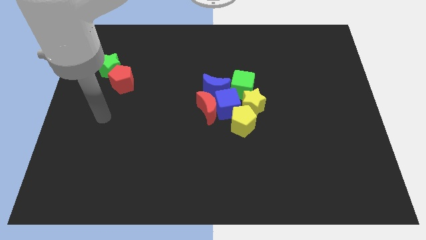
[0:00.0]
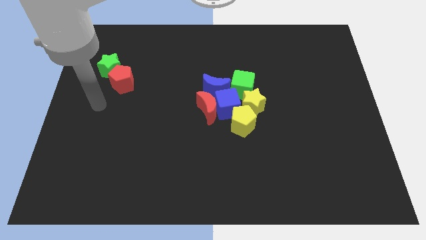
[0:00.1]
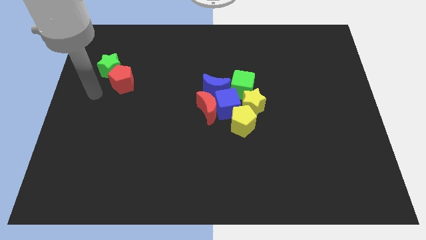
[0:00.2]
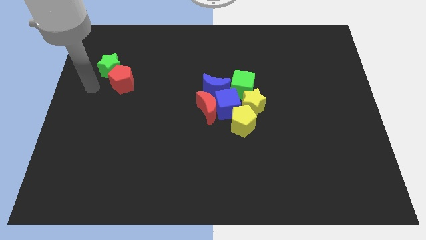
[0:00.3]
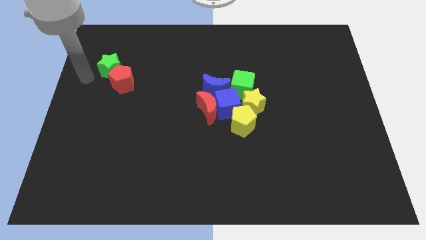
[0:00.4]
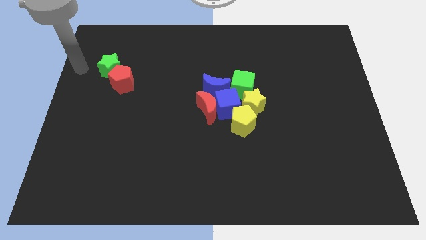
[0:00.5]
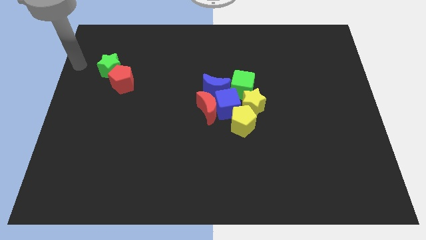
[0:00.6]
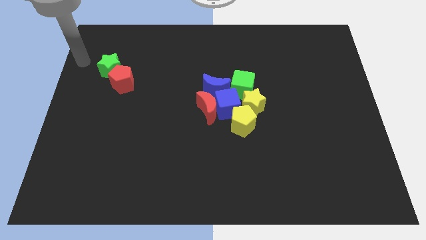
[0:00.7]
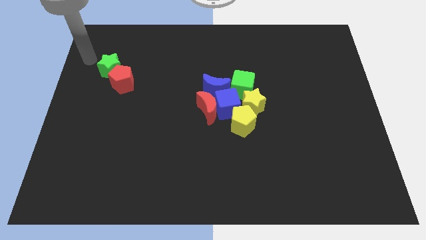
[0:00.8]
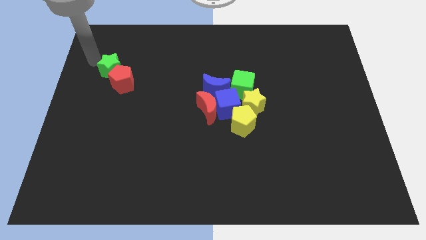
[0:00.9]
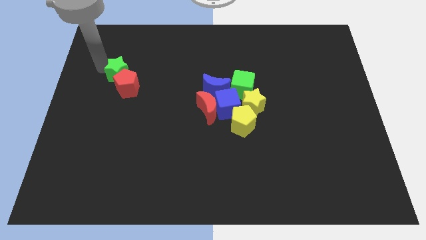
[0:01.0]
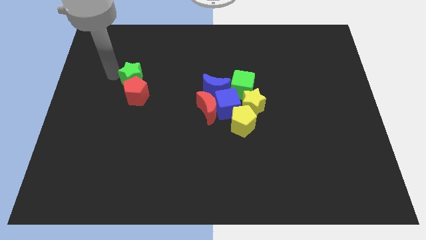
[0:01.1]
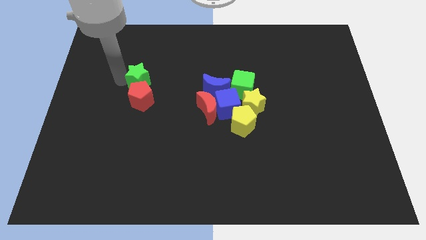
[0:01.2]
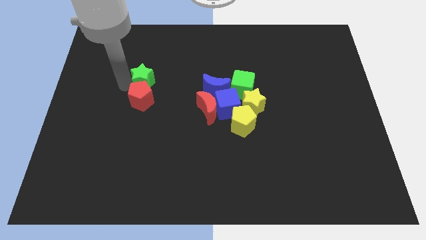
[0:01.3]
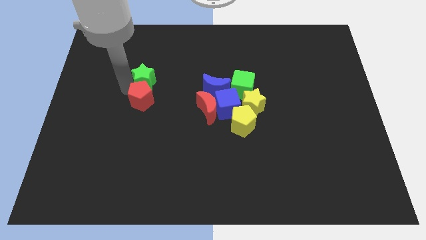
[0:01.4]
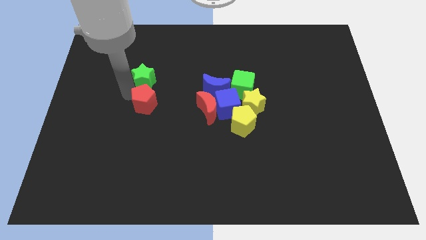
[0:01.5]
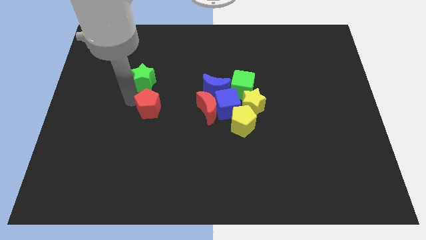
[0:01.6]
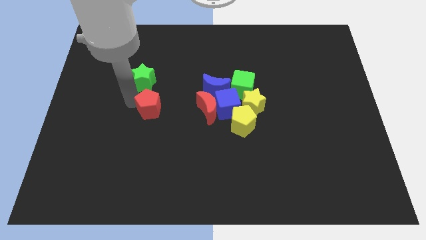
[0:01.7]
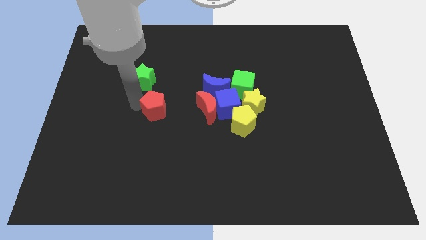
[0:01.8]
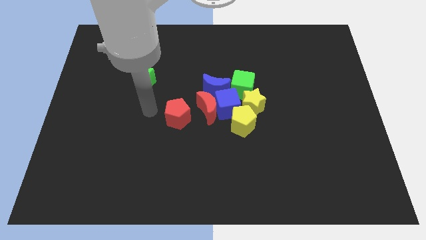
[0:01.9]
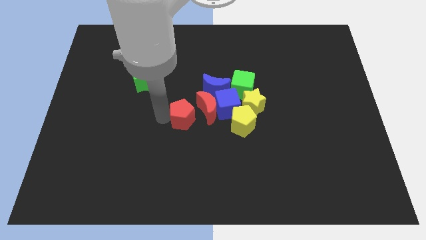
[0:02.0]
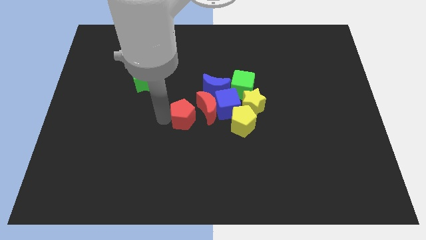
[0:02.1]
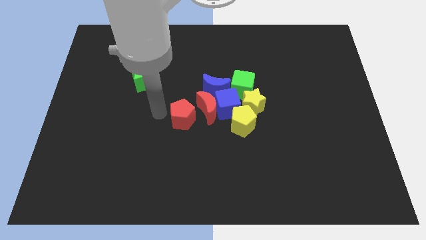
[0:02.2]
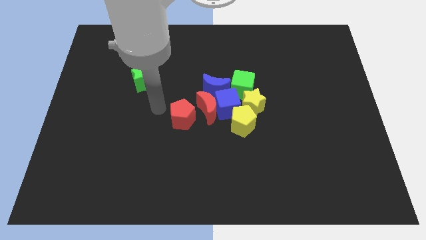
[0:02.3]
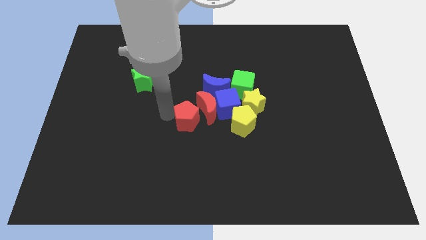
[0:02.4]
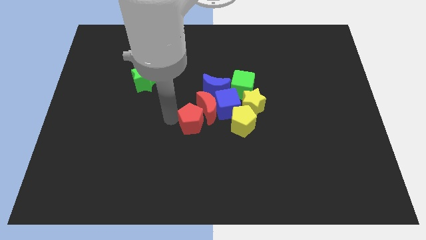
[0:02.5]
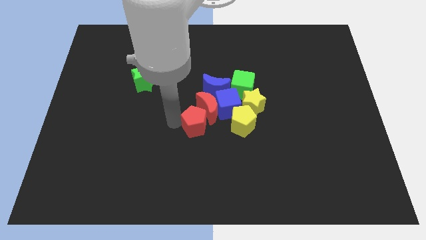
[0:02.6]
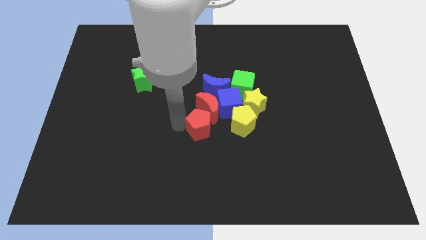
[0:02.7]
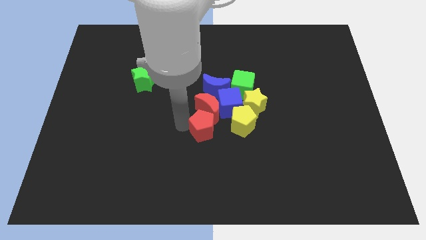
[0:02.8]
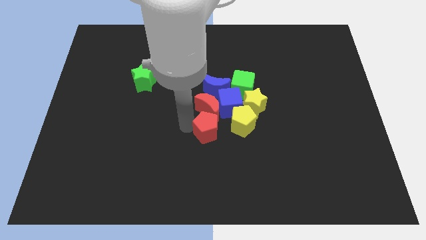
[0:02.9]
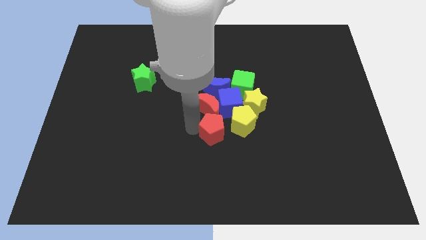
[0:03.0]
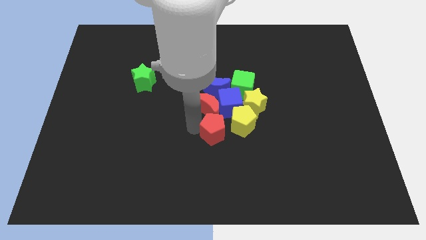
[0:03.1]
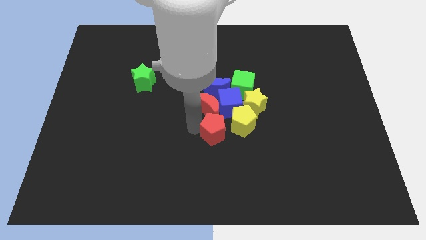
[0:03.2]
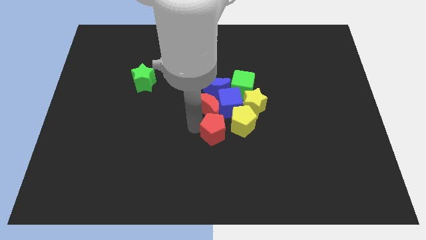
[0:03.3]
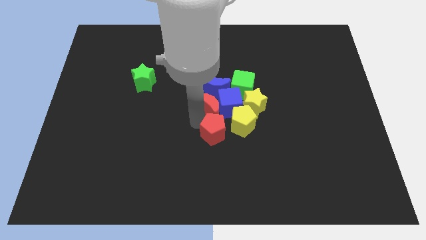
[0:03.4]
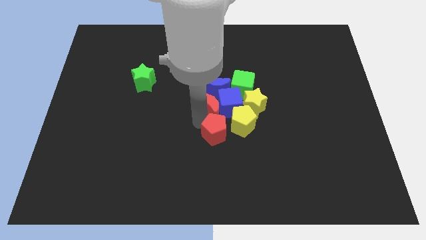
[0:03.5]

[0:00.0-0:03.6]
place the red pentagon to the left side of the yellow pentagon

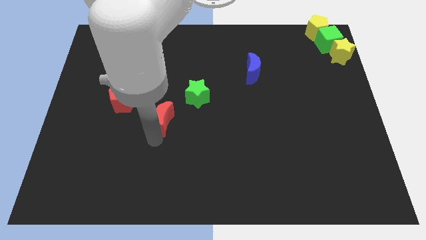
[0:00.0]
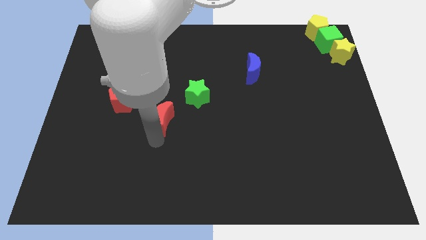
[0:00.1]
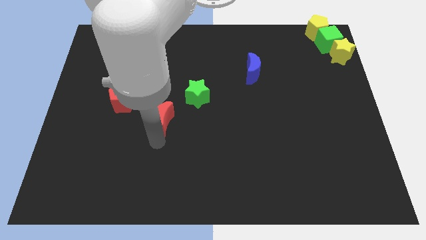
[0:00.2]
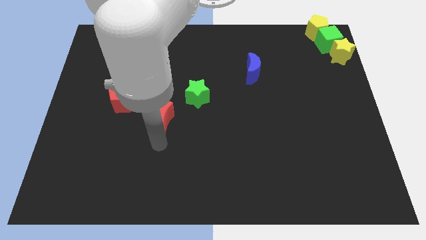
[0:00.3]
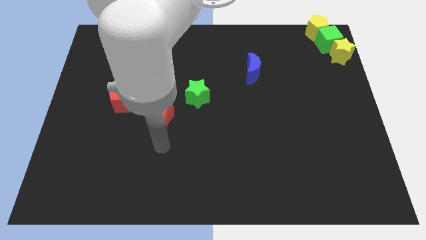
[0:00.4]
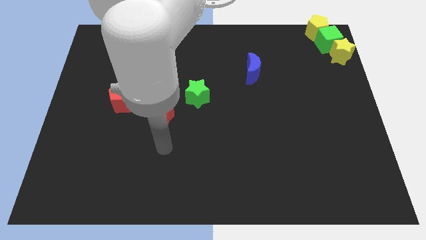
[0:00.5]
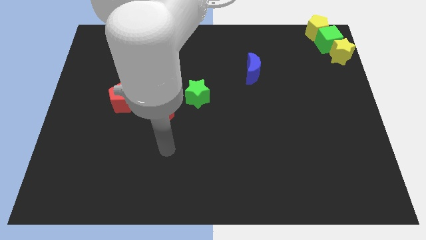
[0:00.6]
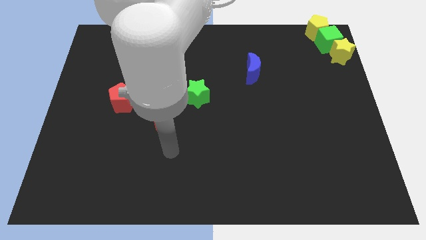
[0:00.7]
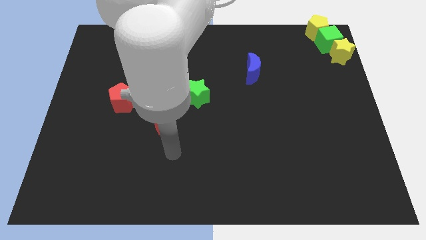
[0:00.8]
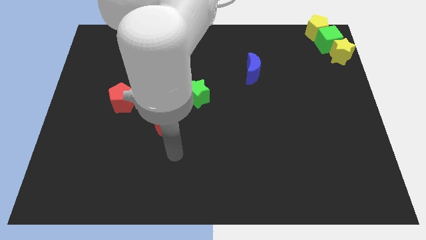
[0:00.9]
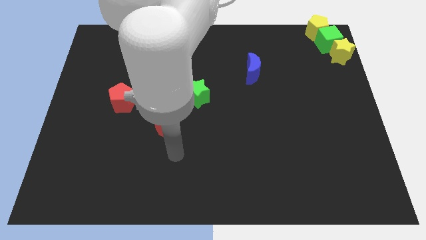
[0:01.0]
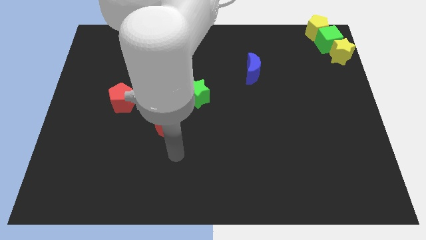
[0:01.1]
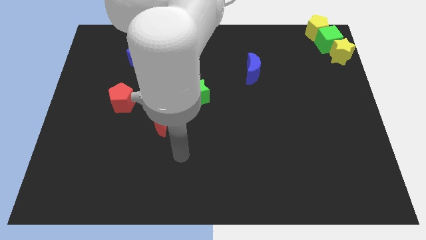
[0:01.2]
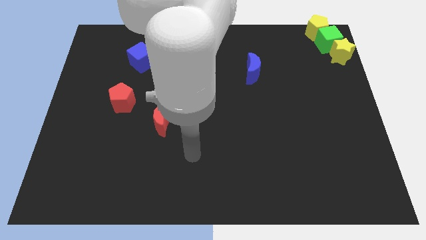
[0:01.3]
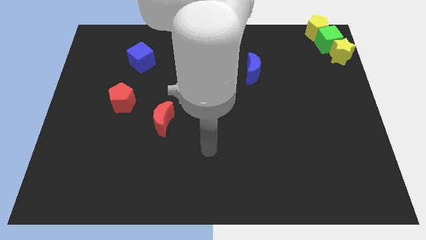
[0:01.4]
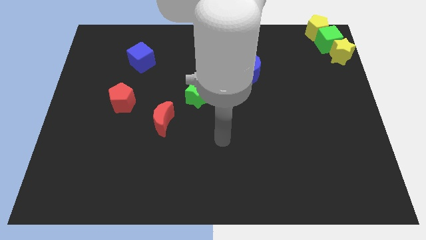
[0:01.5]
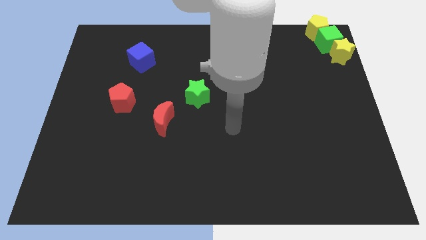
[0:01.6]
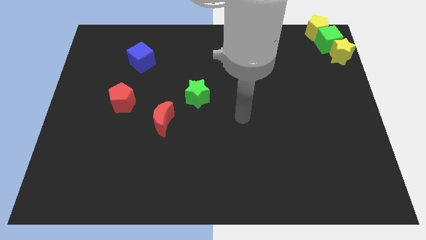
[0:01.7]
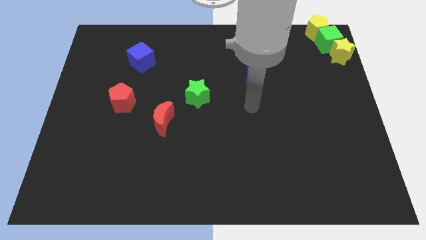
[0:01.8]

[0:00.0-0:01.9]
move the arm away from the red moon

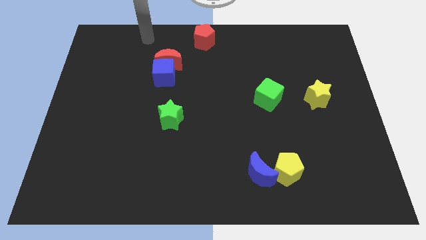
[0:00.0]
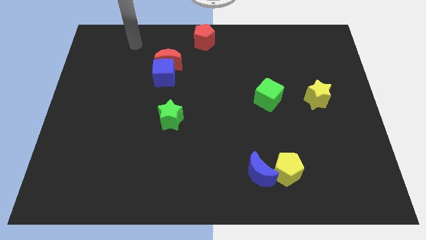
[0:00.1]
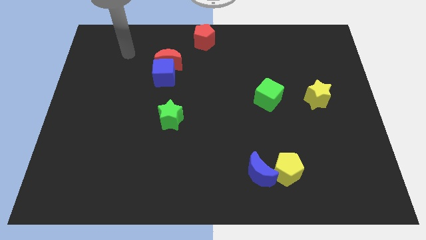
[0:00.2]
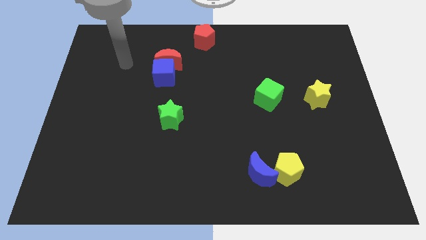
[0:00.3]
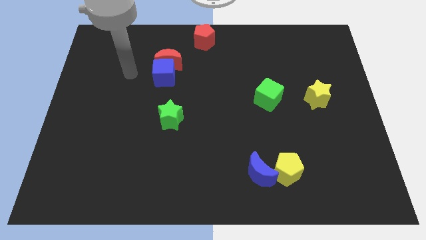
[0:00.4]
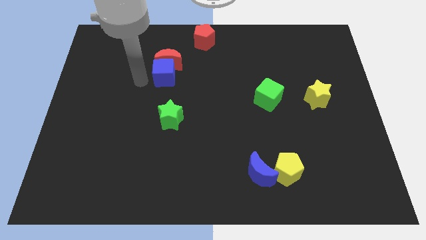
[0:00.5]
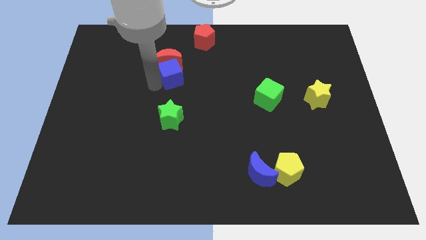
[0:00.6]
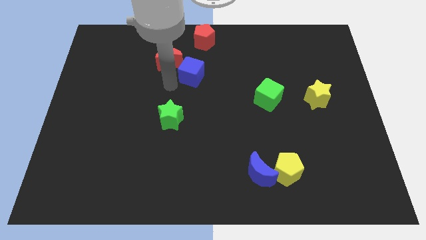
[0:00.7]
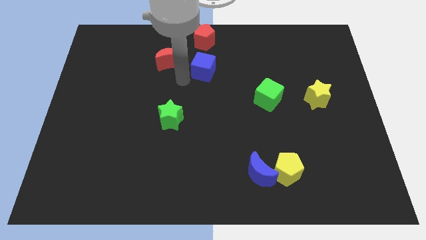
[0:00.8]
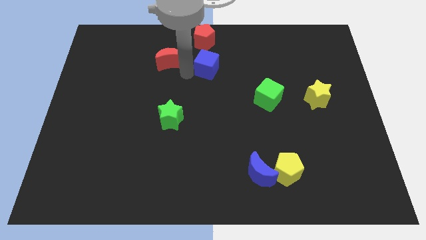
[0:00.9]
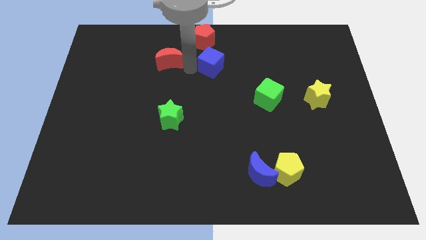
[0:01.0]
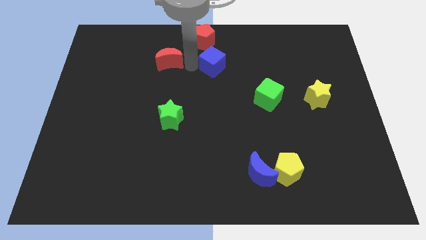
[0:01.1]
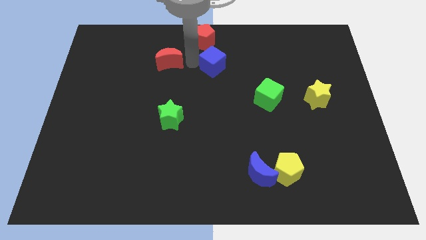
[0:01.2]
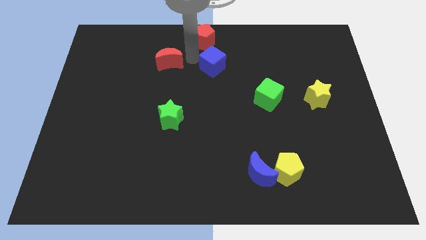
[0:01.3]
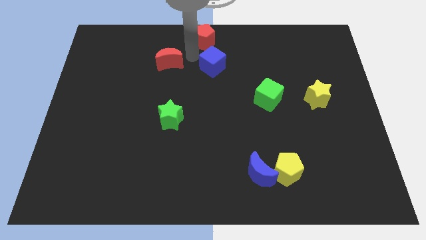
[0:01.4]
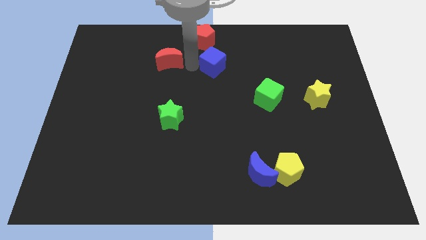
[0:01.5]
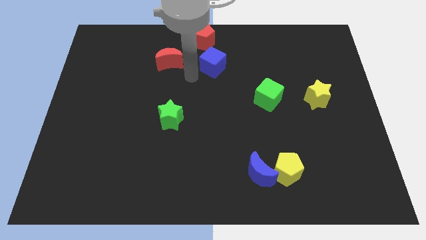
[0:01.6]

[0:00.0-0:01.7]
separate the blue cube from the red crescent

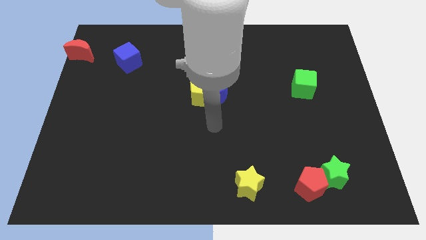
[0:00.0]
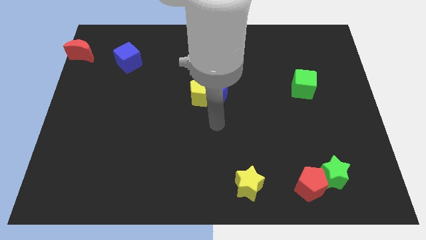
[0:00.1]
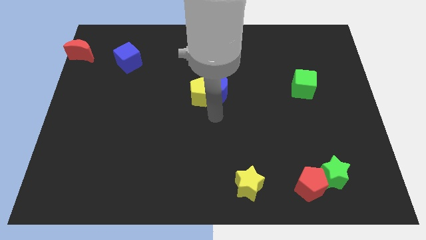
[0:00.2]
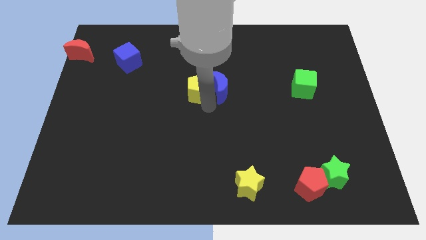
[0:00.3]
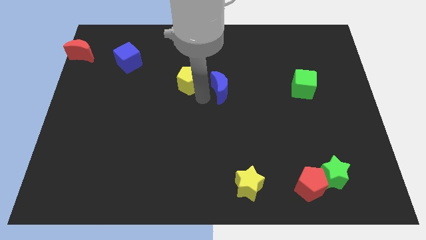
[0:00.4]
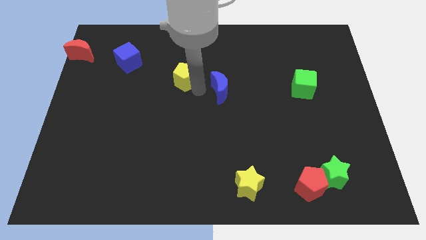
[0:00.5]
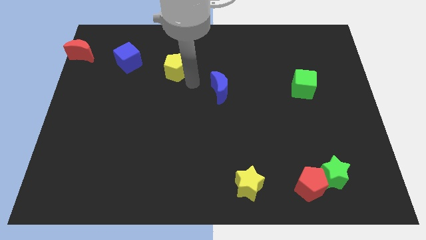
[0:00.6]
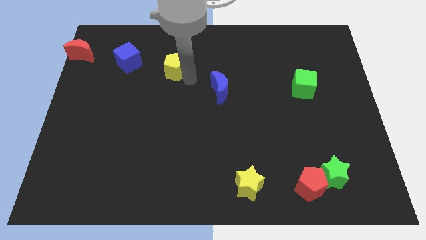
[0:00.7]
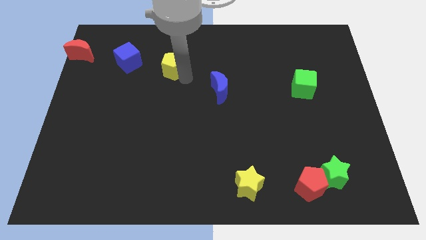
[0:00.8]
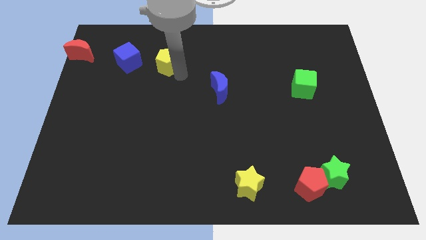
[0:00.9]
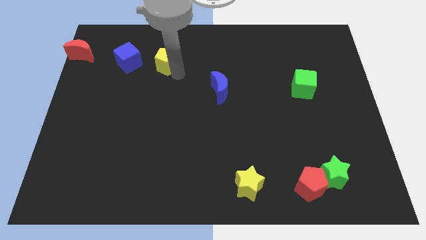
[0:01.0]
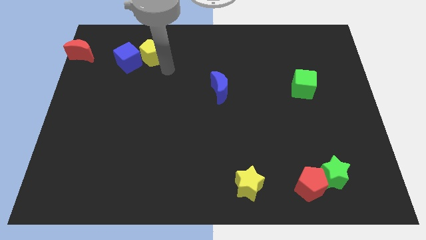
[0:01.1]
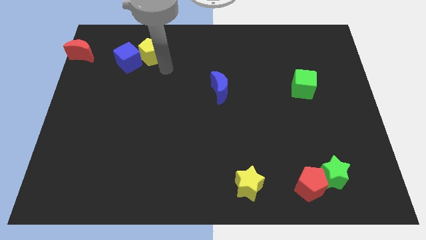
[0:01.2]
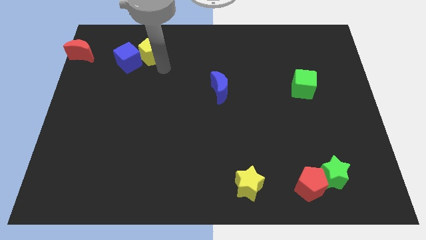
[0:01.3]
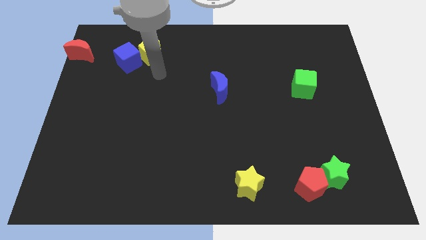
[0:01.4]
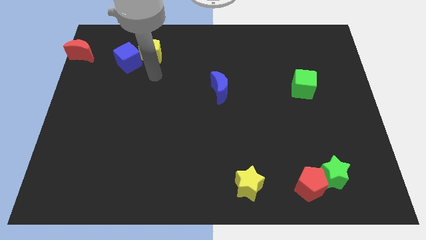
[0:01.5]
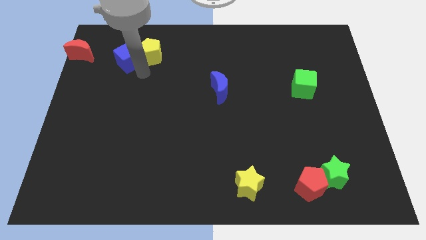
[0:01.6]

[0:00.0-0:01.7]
separate the yellow pentagon from the blue crescent
